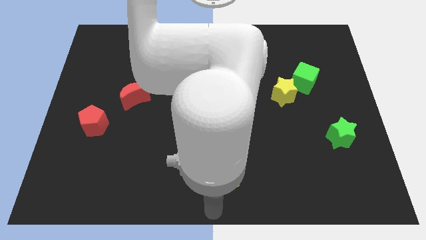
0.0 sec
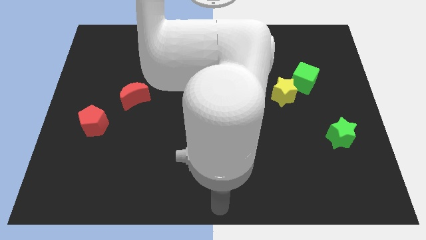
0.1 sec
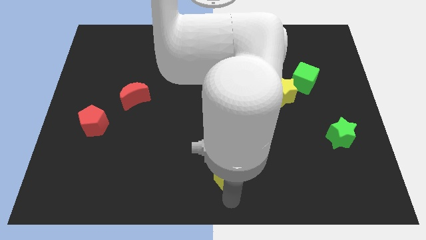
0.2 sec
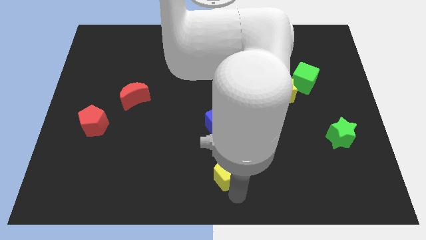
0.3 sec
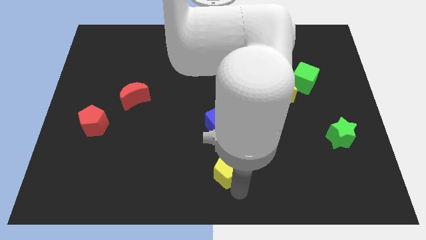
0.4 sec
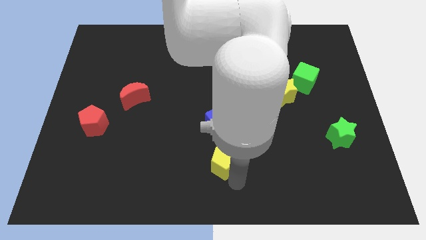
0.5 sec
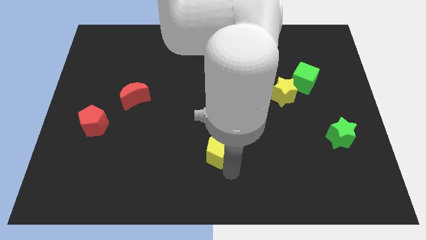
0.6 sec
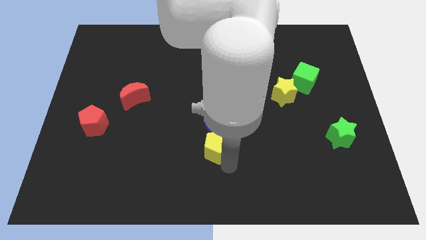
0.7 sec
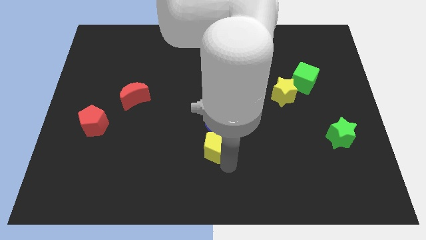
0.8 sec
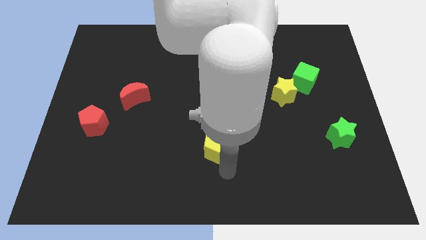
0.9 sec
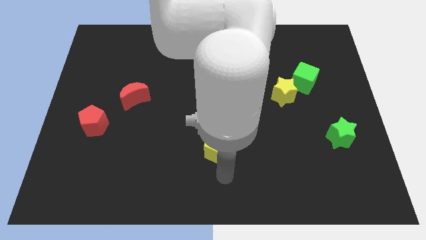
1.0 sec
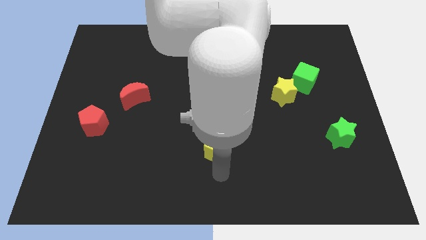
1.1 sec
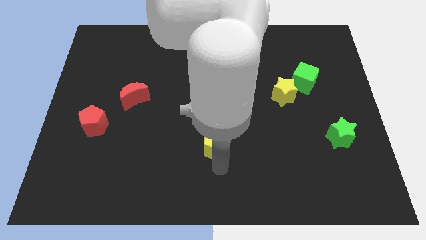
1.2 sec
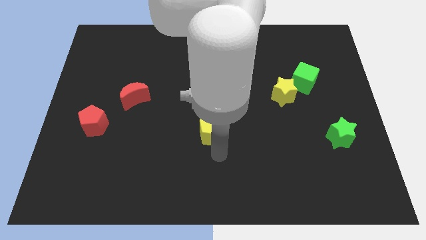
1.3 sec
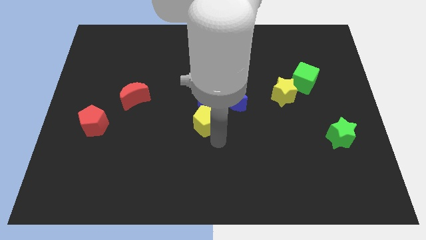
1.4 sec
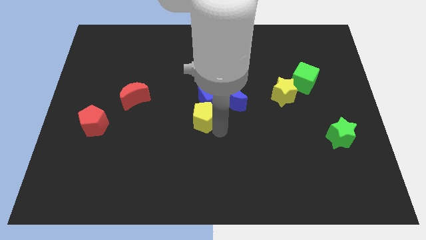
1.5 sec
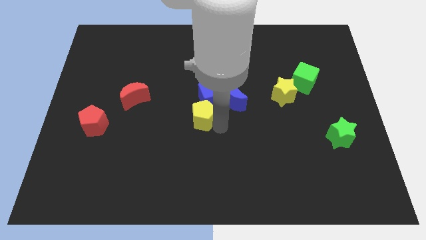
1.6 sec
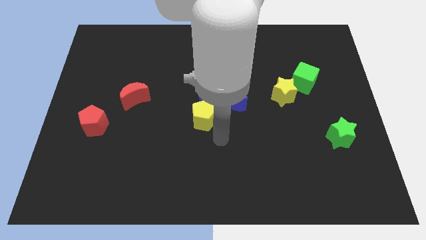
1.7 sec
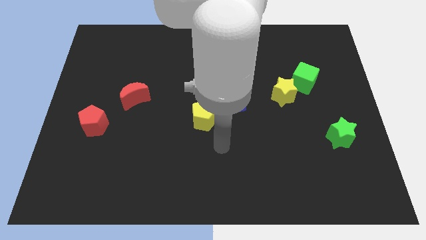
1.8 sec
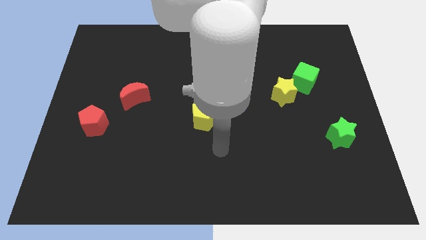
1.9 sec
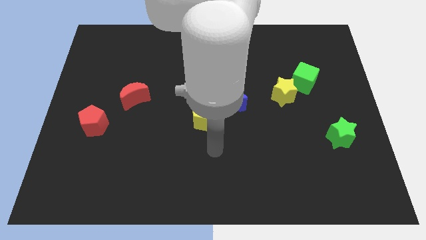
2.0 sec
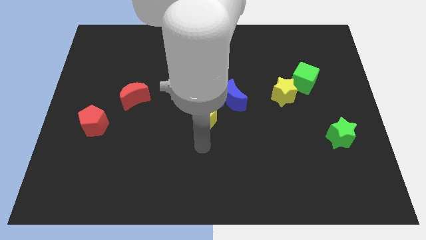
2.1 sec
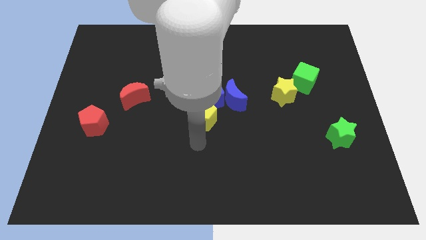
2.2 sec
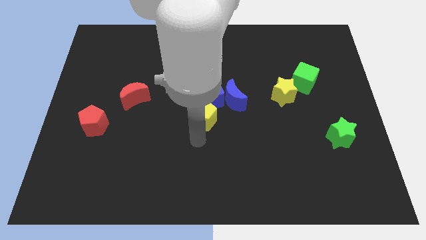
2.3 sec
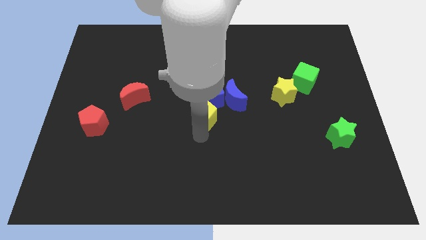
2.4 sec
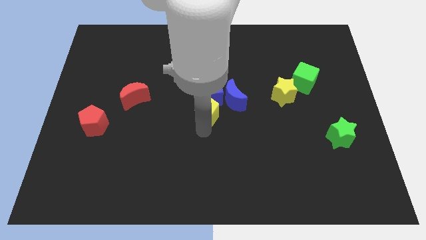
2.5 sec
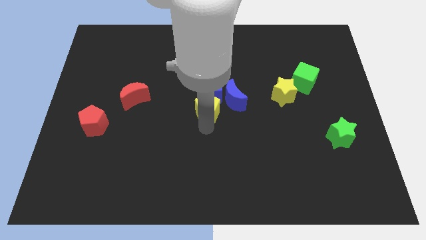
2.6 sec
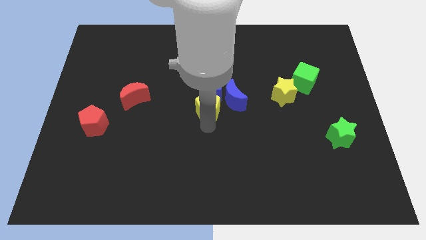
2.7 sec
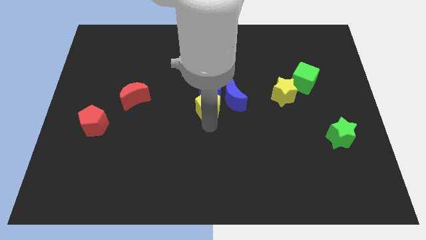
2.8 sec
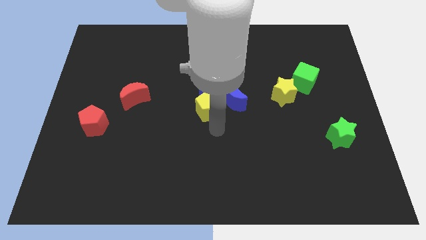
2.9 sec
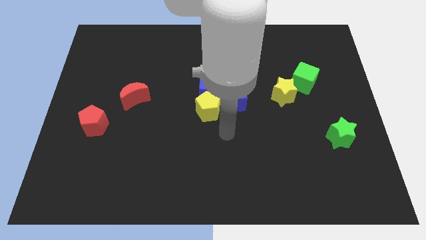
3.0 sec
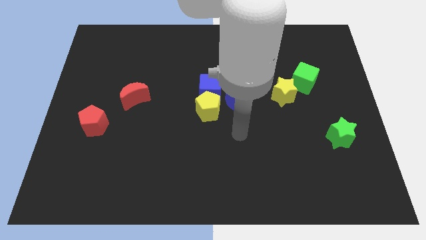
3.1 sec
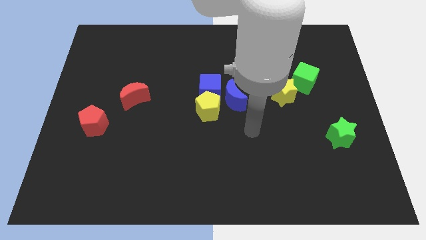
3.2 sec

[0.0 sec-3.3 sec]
put the yellow pentagon into the blue blocks

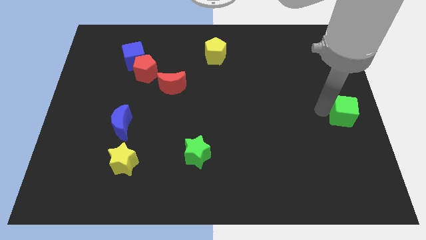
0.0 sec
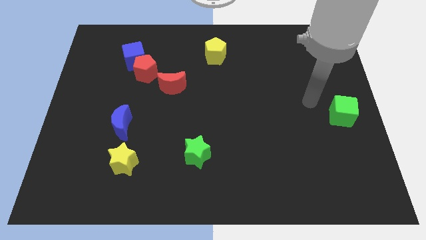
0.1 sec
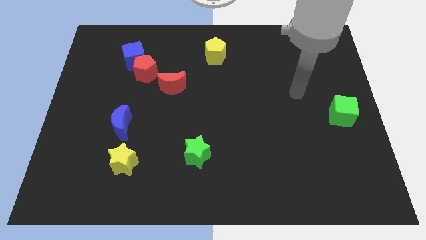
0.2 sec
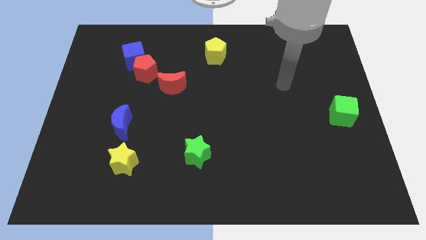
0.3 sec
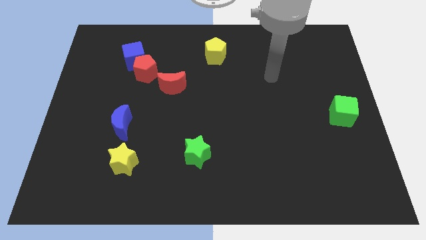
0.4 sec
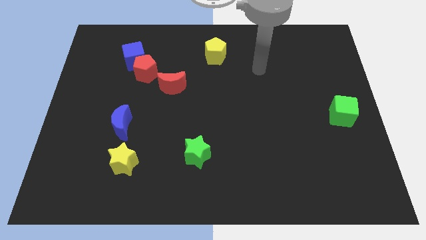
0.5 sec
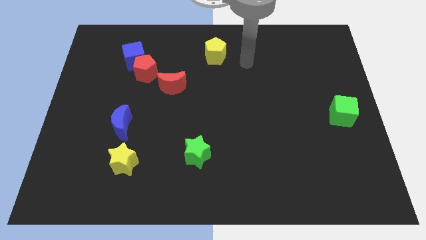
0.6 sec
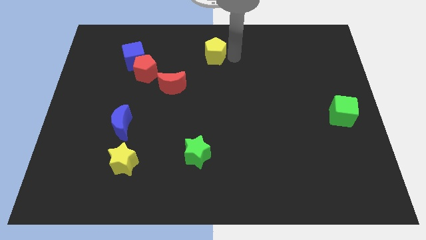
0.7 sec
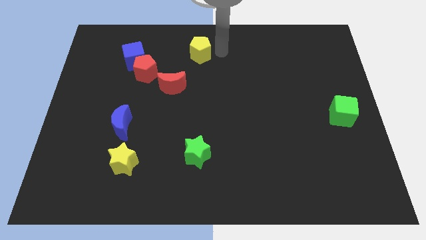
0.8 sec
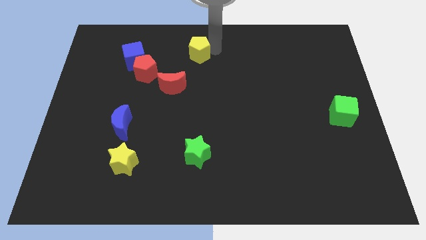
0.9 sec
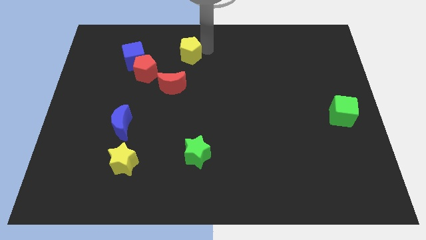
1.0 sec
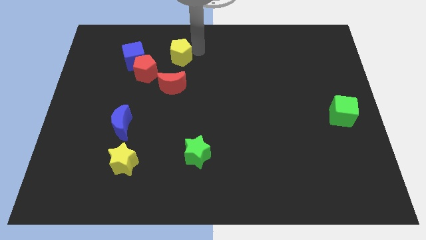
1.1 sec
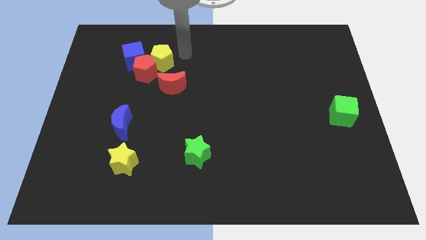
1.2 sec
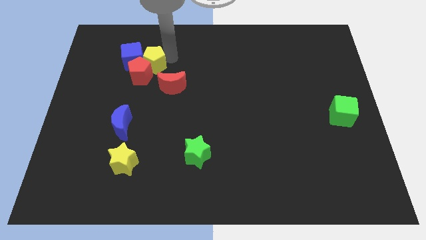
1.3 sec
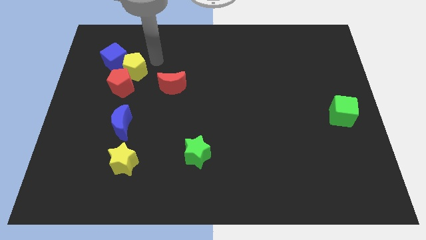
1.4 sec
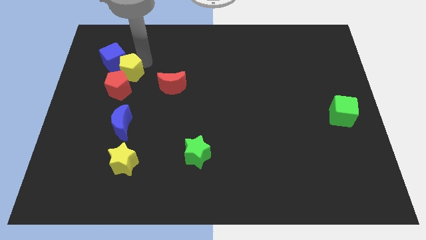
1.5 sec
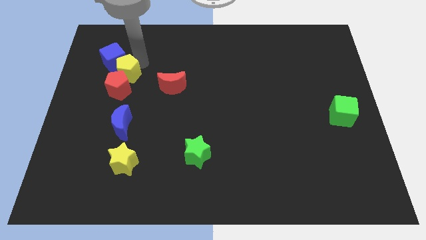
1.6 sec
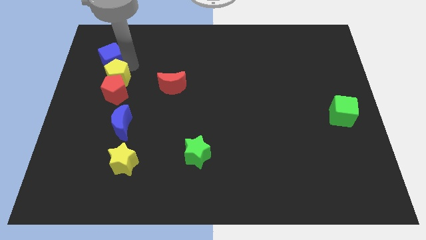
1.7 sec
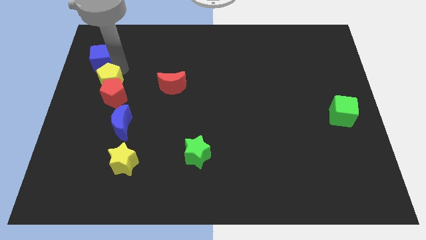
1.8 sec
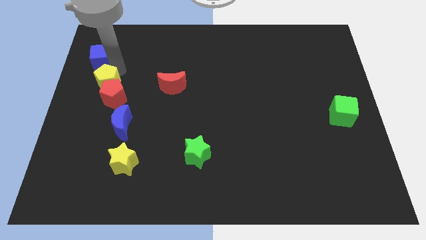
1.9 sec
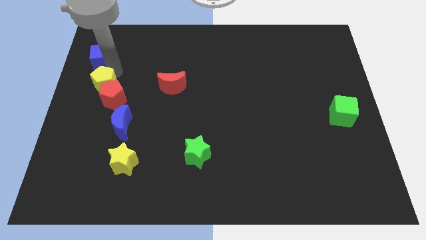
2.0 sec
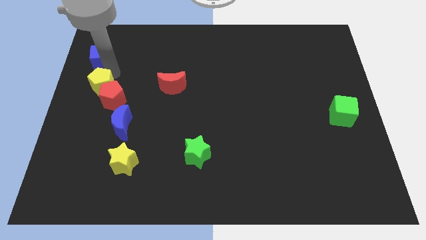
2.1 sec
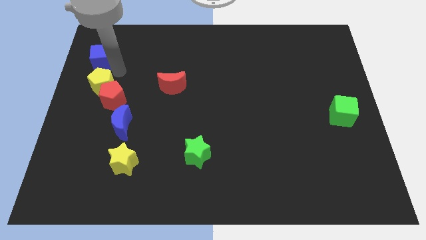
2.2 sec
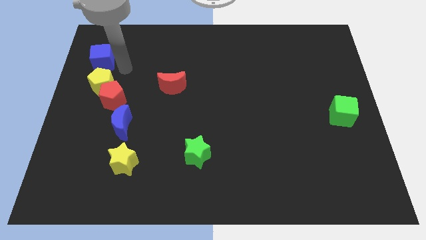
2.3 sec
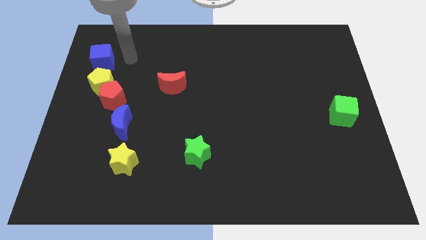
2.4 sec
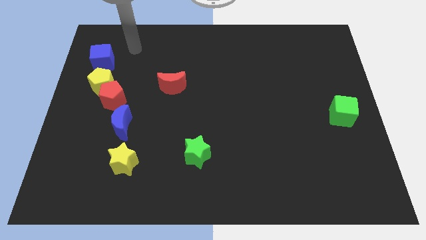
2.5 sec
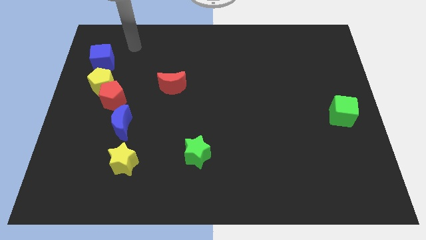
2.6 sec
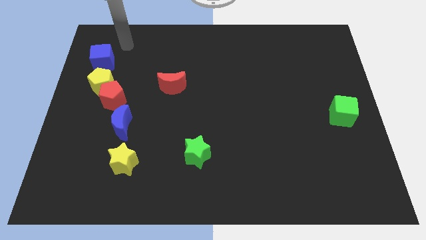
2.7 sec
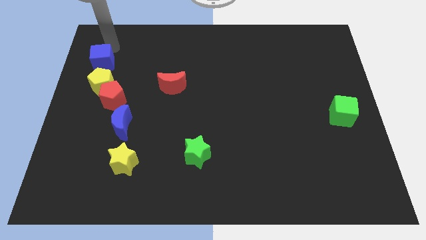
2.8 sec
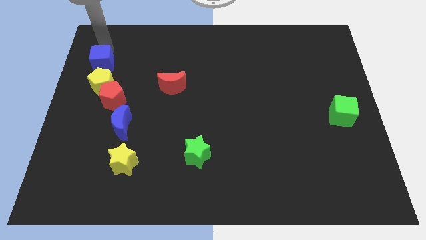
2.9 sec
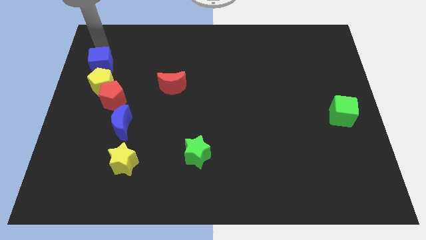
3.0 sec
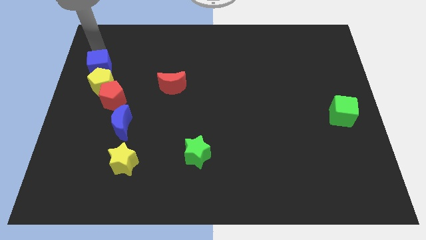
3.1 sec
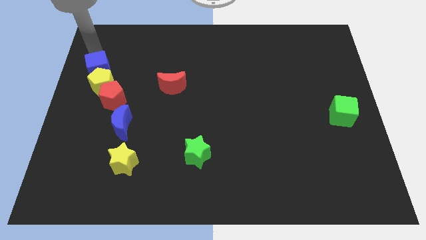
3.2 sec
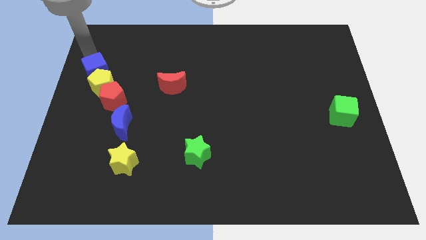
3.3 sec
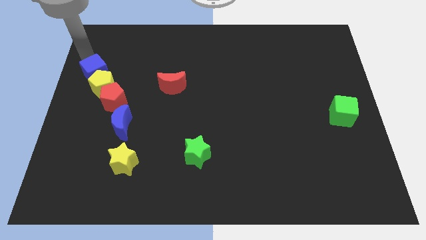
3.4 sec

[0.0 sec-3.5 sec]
move your arm away from the green cube

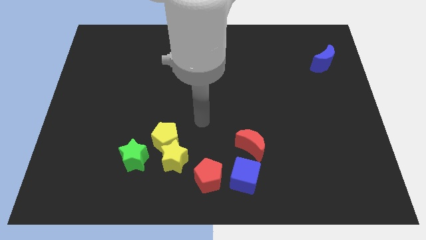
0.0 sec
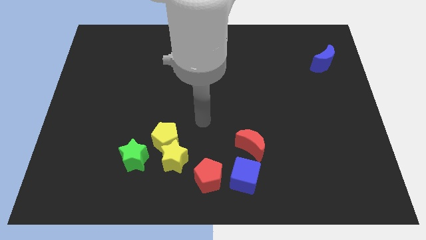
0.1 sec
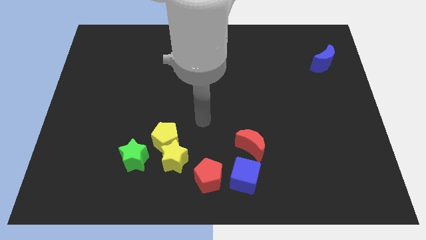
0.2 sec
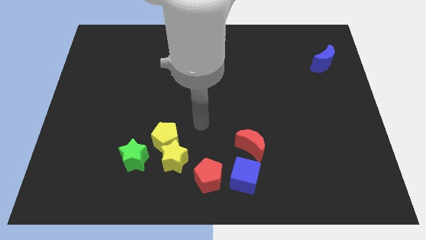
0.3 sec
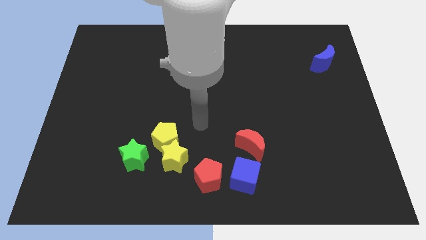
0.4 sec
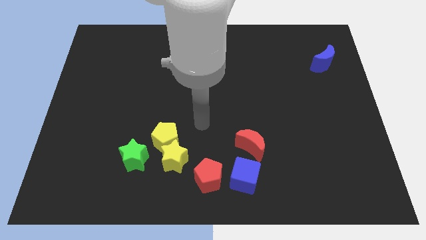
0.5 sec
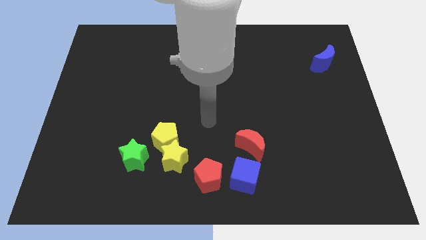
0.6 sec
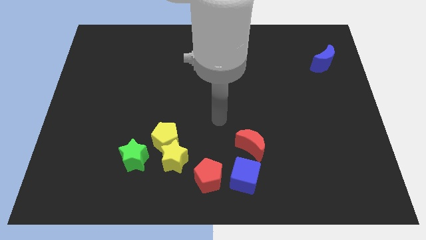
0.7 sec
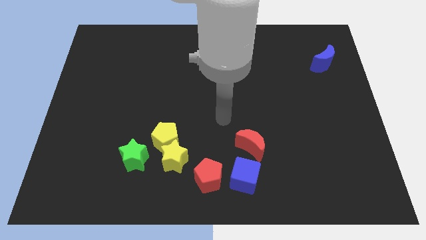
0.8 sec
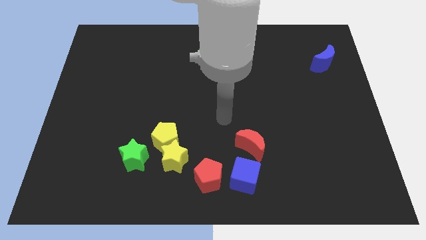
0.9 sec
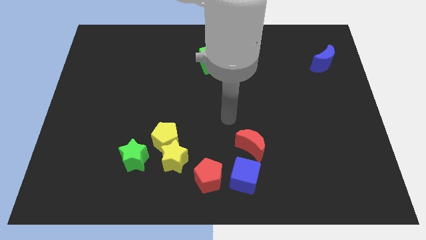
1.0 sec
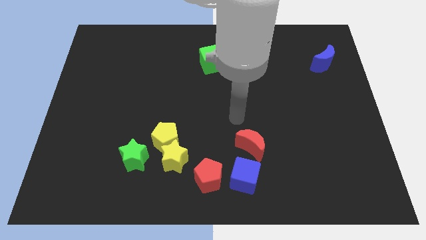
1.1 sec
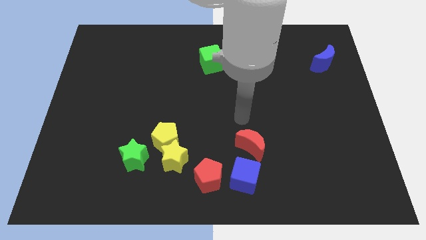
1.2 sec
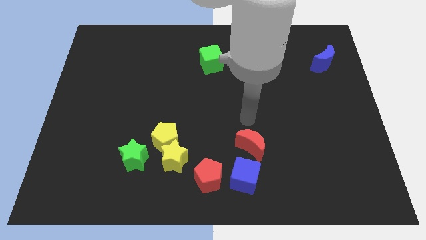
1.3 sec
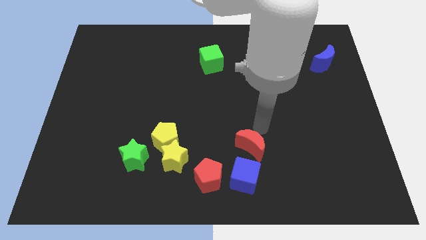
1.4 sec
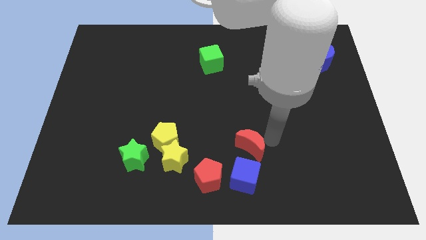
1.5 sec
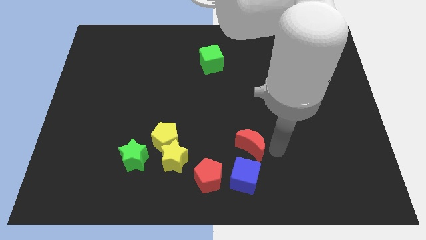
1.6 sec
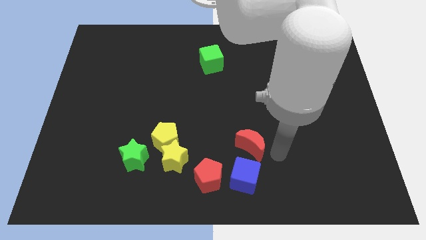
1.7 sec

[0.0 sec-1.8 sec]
move robot arm towards the red crescent

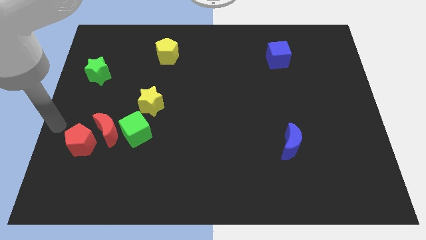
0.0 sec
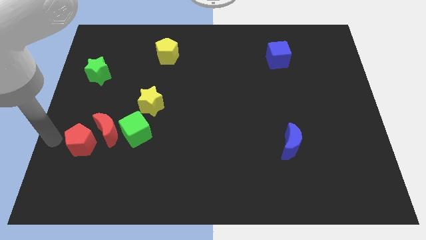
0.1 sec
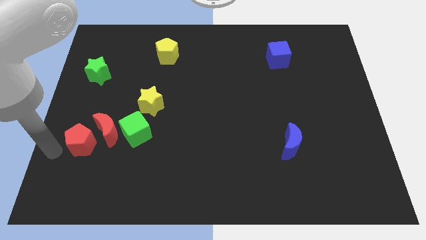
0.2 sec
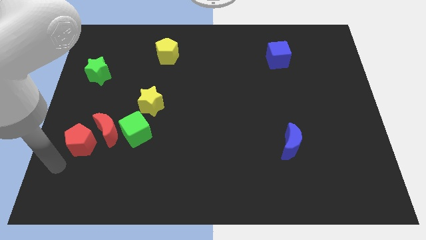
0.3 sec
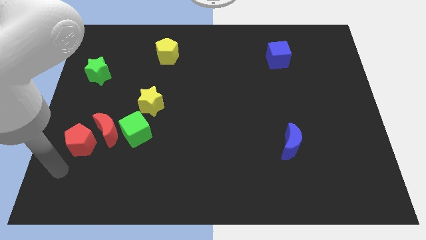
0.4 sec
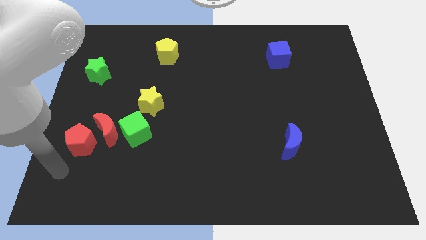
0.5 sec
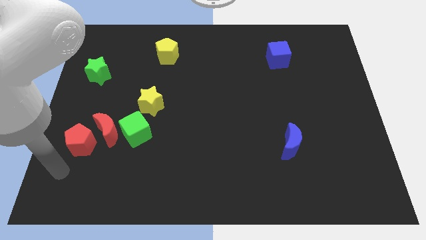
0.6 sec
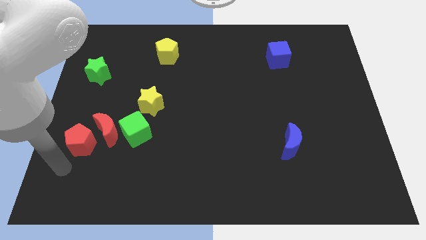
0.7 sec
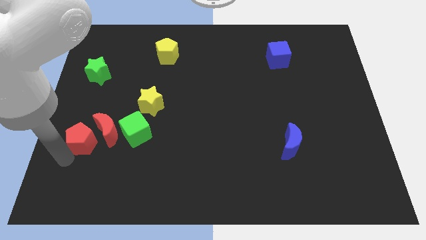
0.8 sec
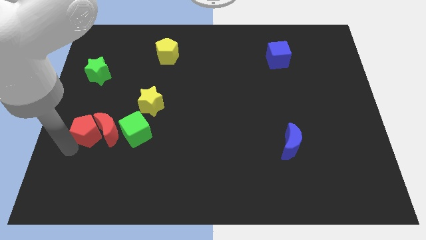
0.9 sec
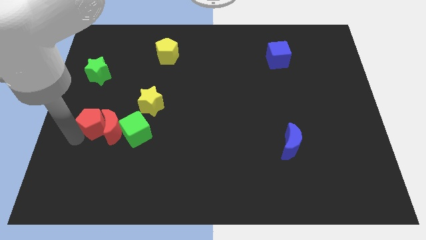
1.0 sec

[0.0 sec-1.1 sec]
slide red pentagon into red moon
